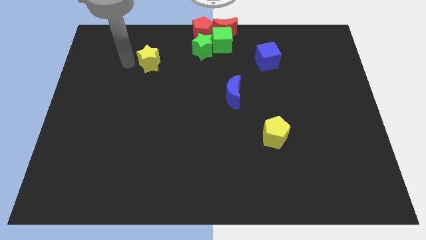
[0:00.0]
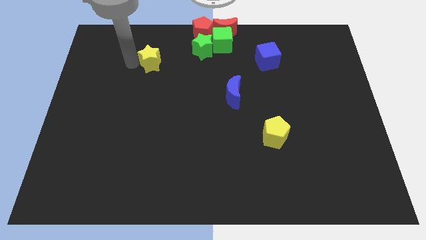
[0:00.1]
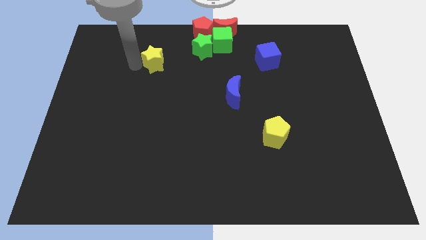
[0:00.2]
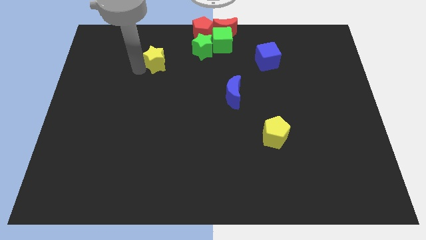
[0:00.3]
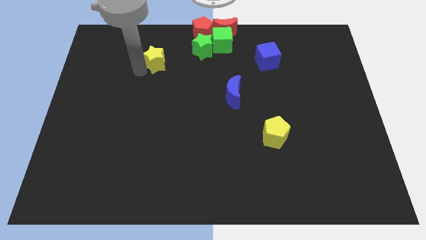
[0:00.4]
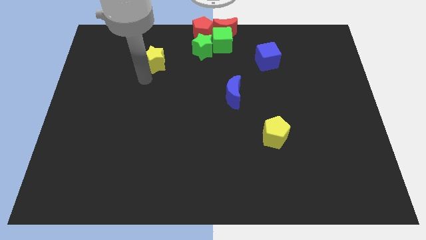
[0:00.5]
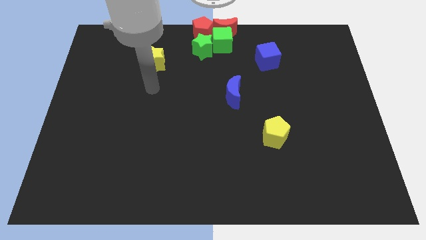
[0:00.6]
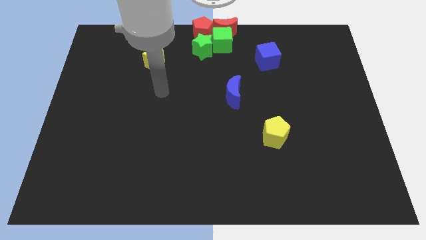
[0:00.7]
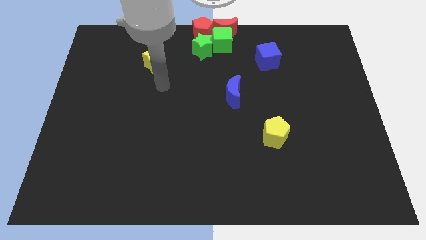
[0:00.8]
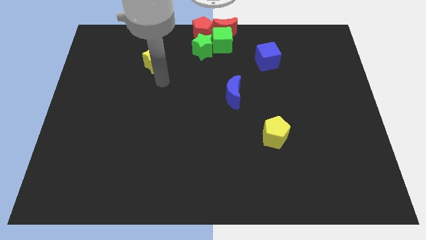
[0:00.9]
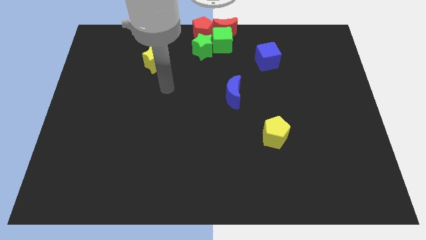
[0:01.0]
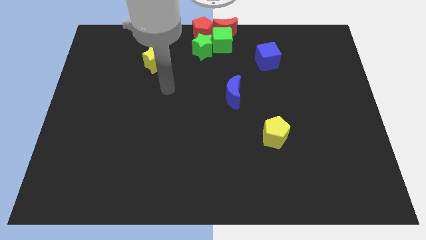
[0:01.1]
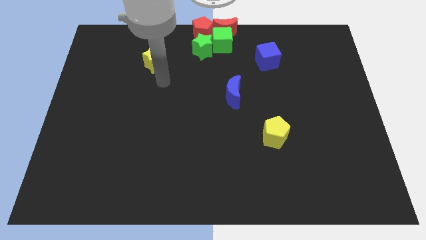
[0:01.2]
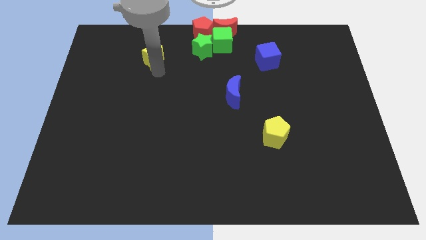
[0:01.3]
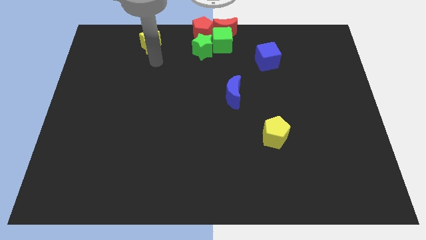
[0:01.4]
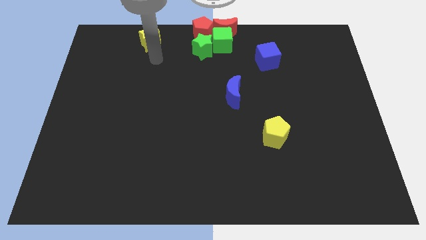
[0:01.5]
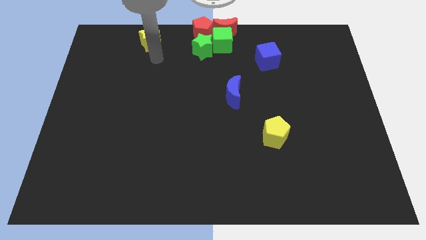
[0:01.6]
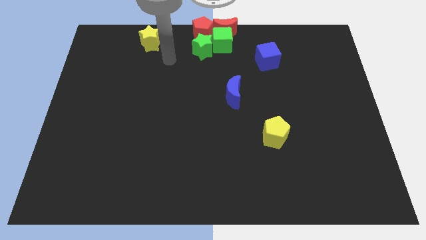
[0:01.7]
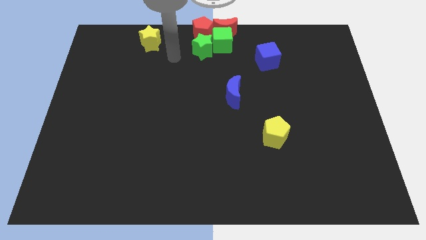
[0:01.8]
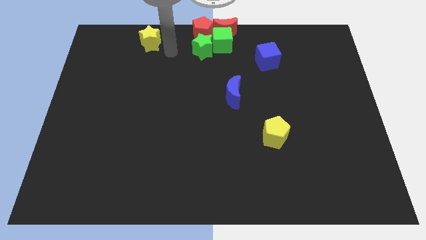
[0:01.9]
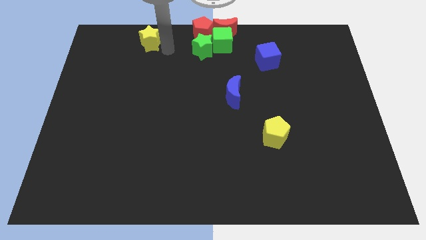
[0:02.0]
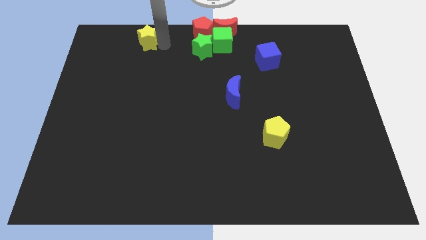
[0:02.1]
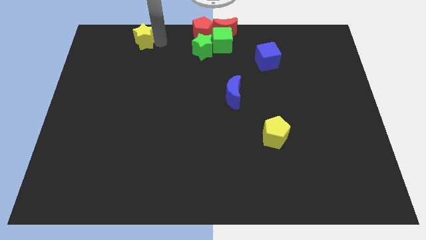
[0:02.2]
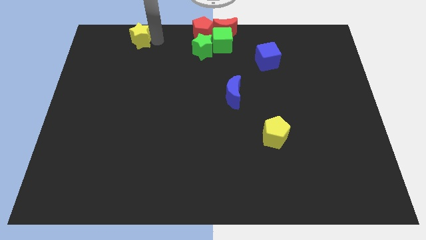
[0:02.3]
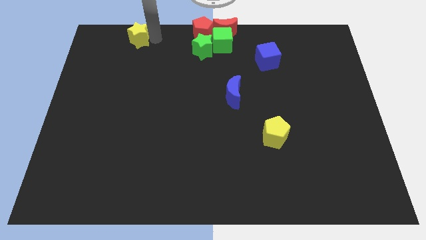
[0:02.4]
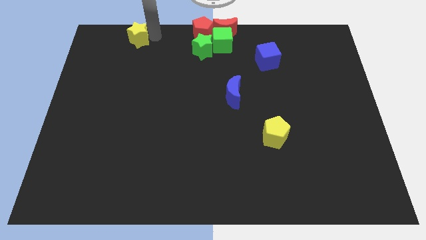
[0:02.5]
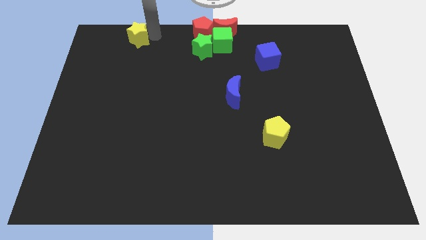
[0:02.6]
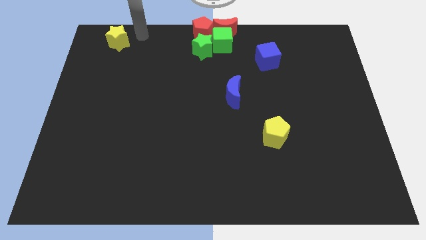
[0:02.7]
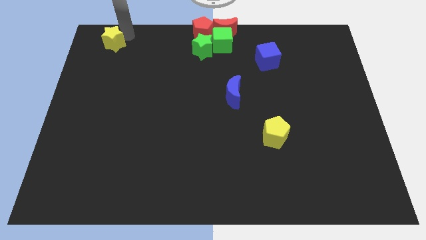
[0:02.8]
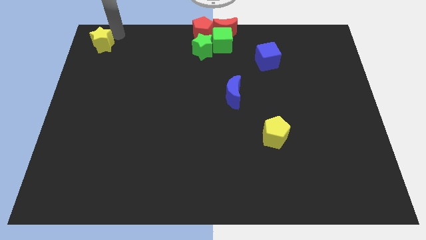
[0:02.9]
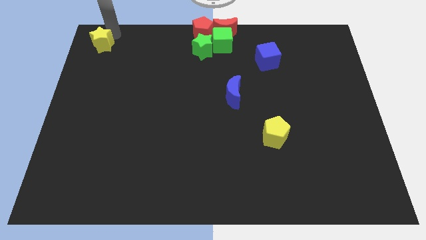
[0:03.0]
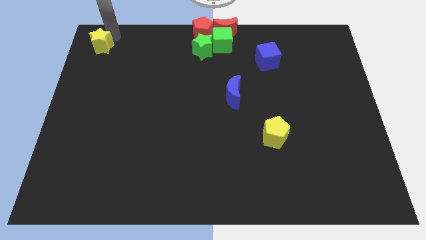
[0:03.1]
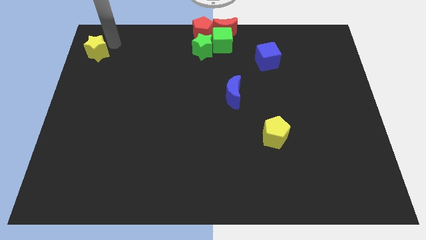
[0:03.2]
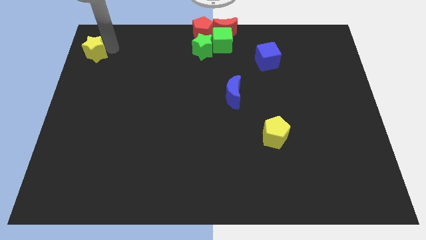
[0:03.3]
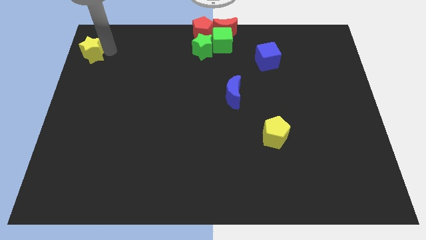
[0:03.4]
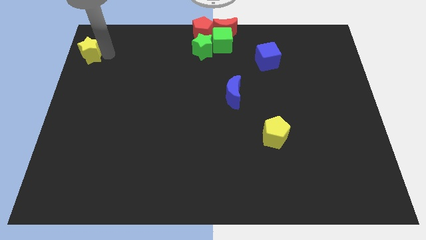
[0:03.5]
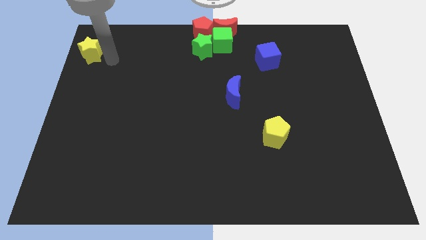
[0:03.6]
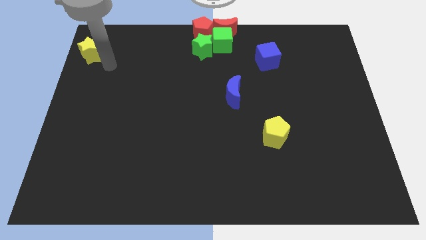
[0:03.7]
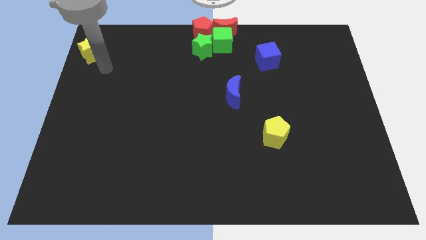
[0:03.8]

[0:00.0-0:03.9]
slide yellow star towards top left corner

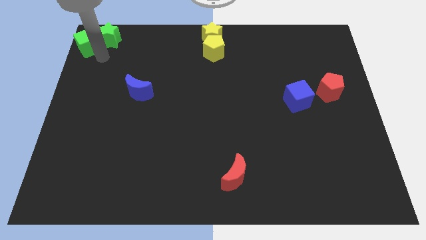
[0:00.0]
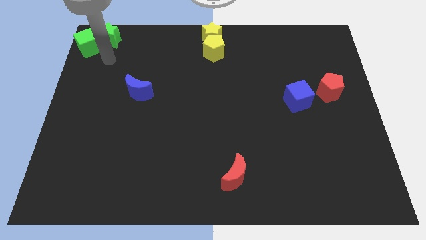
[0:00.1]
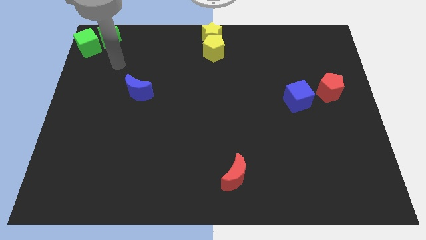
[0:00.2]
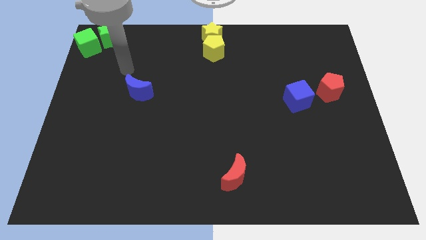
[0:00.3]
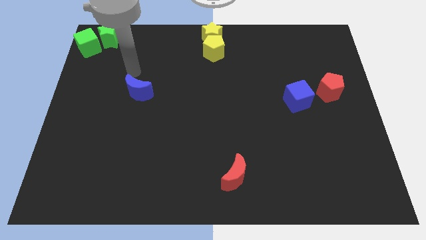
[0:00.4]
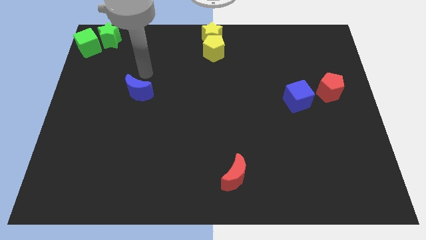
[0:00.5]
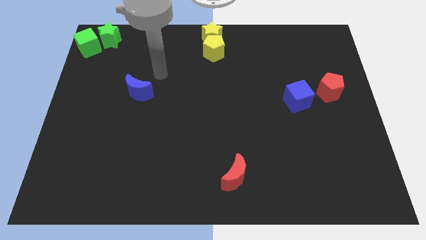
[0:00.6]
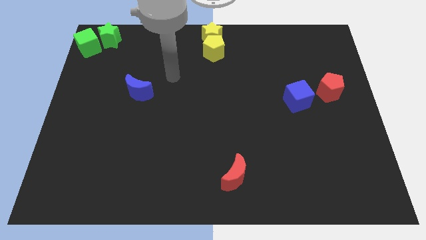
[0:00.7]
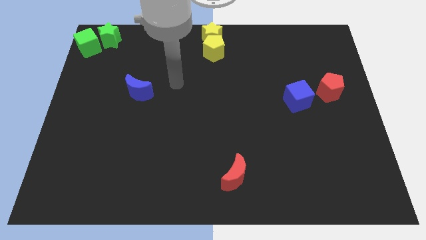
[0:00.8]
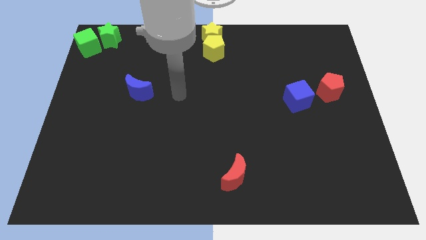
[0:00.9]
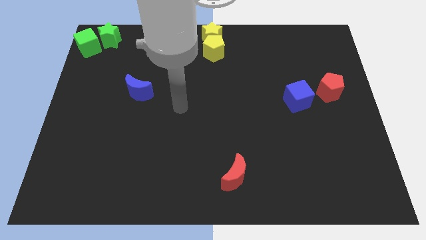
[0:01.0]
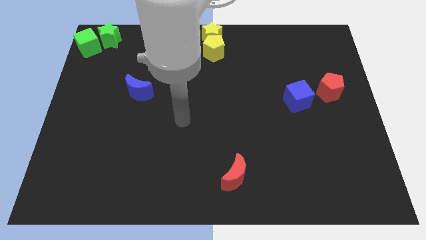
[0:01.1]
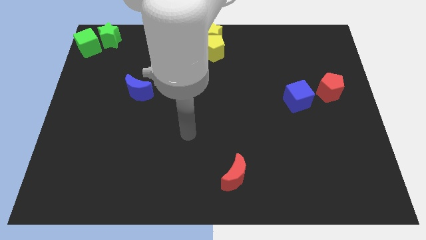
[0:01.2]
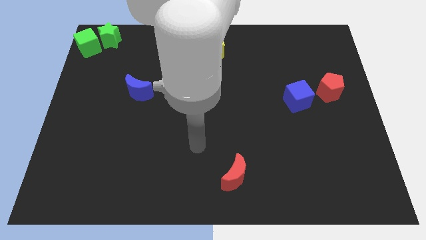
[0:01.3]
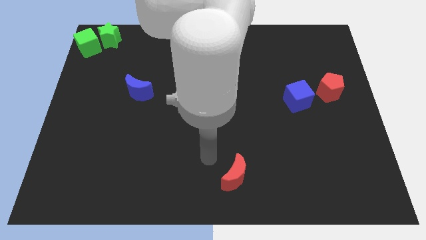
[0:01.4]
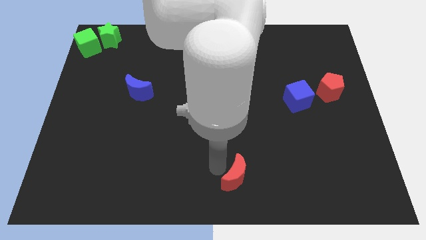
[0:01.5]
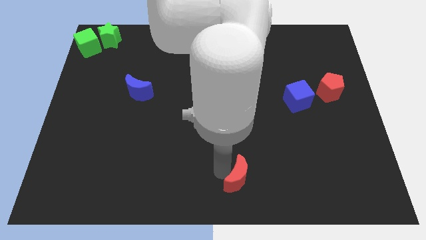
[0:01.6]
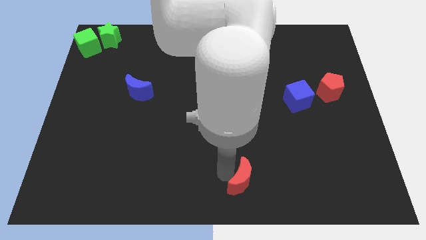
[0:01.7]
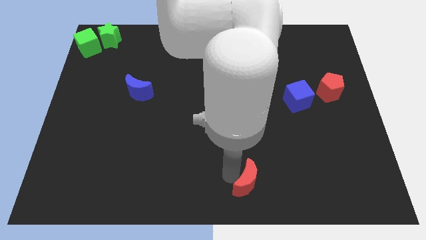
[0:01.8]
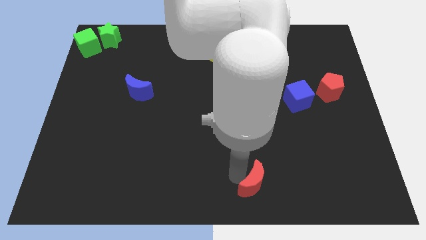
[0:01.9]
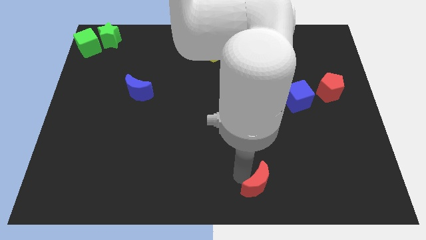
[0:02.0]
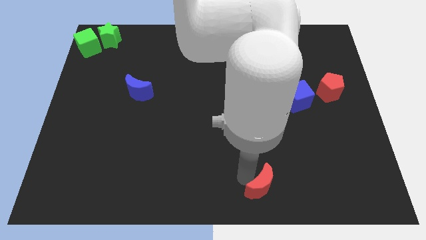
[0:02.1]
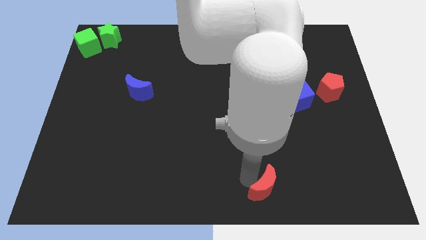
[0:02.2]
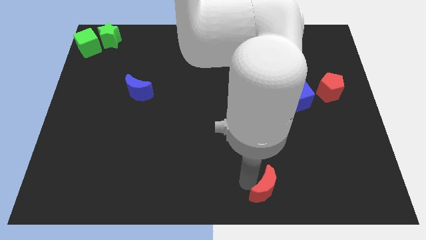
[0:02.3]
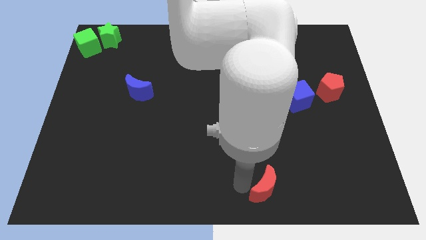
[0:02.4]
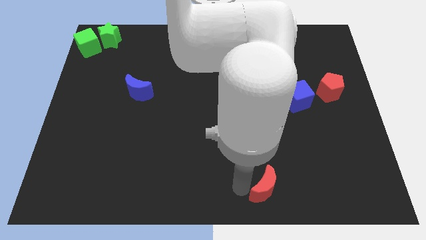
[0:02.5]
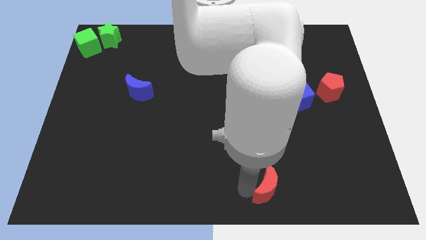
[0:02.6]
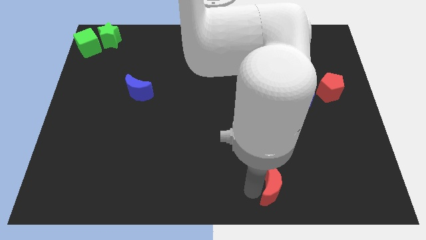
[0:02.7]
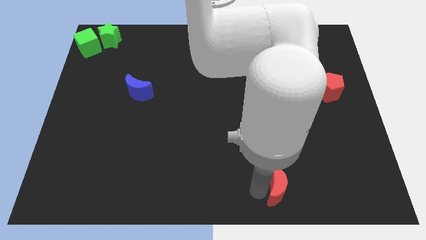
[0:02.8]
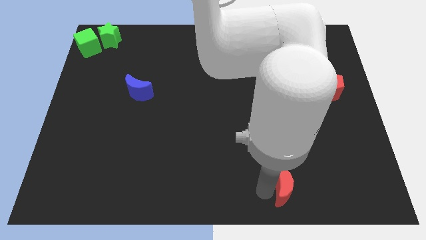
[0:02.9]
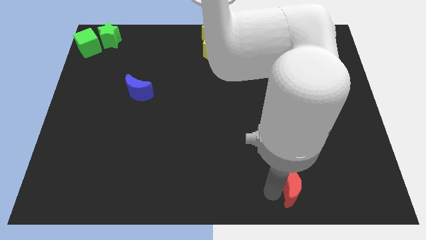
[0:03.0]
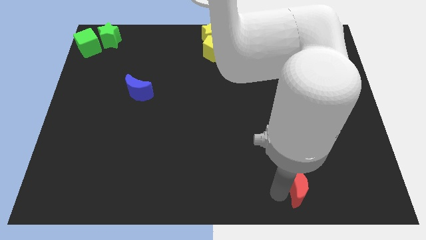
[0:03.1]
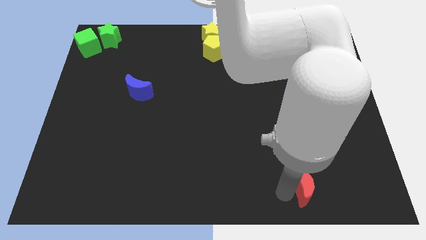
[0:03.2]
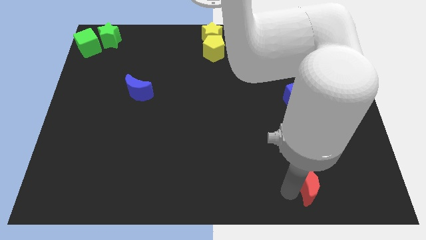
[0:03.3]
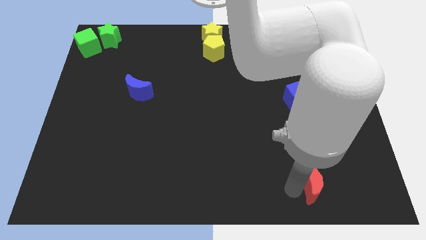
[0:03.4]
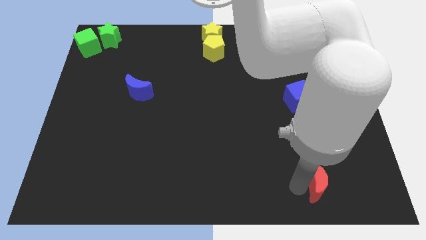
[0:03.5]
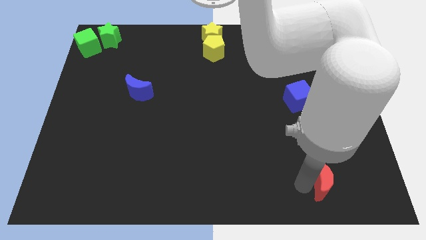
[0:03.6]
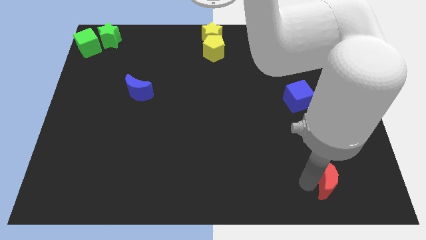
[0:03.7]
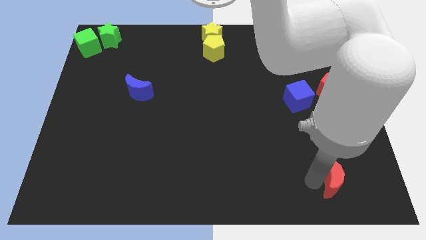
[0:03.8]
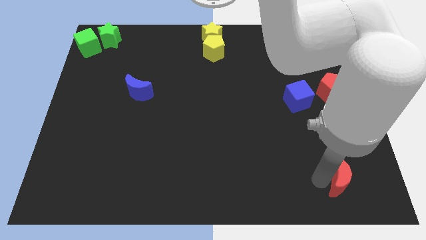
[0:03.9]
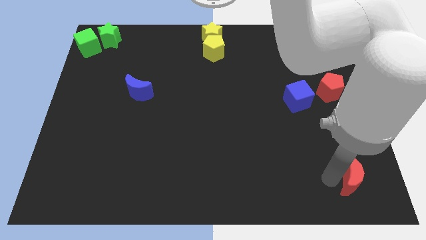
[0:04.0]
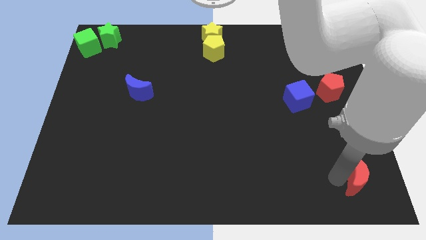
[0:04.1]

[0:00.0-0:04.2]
push the red moon towards the bottom right side of the table

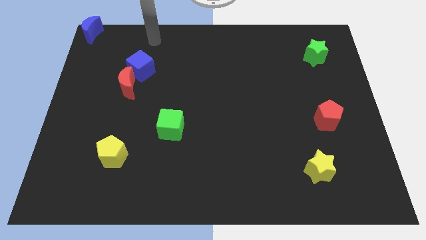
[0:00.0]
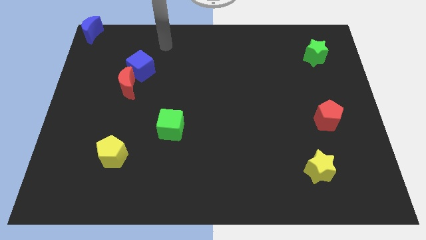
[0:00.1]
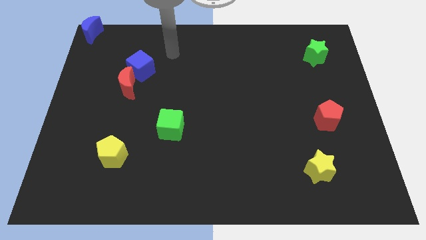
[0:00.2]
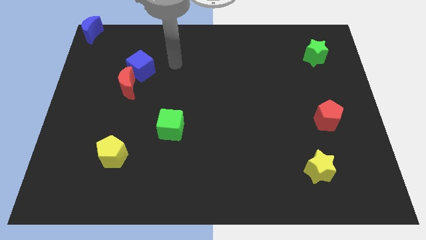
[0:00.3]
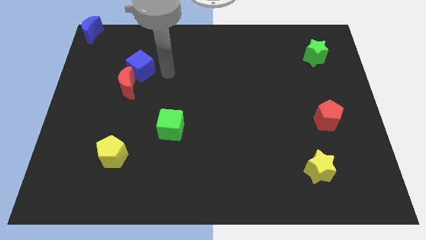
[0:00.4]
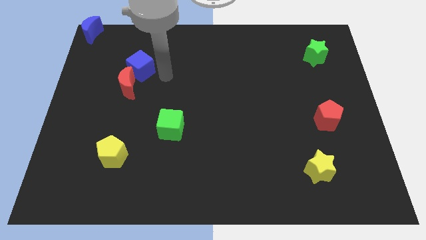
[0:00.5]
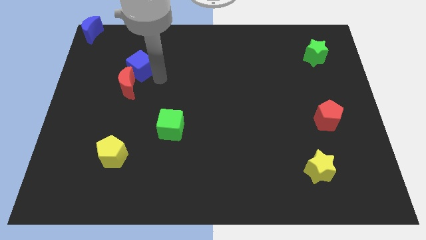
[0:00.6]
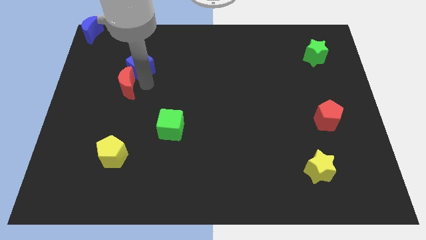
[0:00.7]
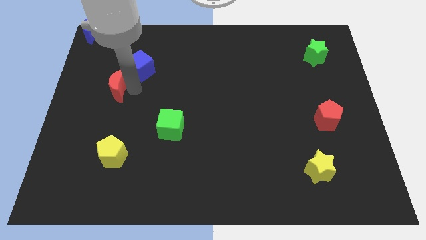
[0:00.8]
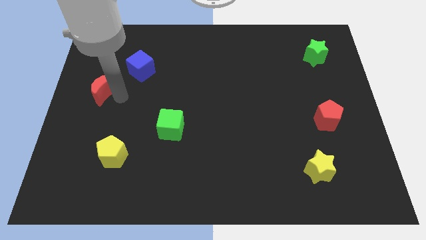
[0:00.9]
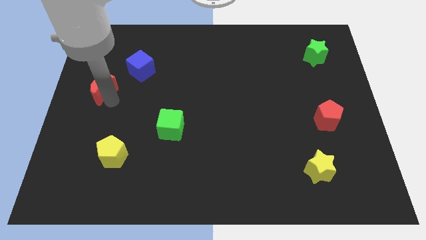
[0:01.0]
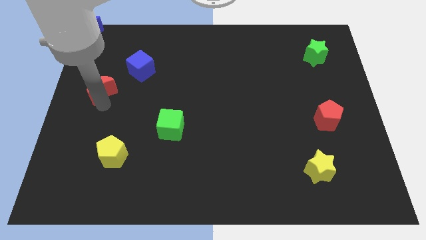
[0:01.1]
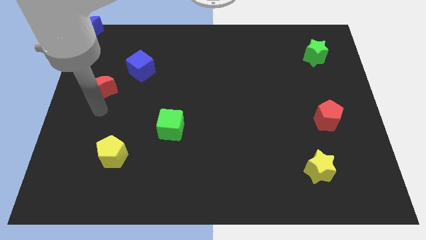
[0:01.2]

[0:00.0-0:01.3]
separate the red moon from the blue cube
